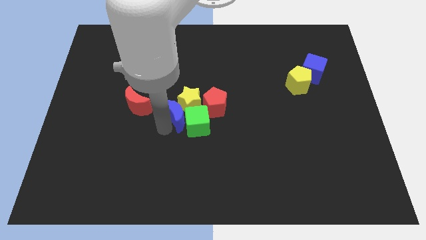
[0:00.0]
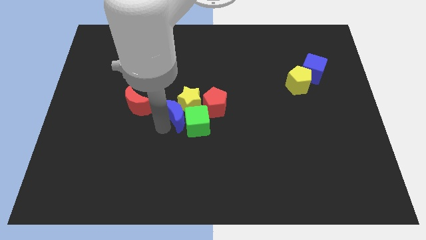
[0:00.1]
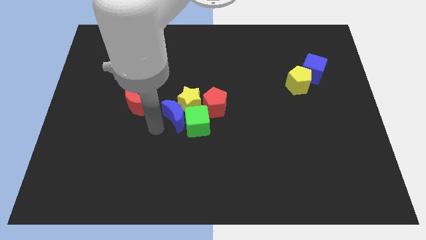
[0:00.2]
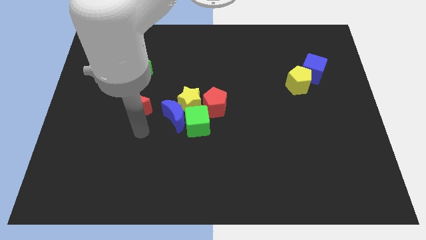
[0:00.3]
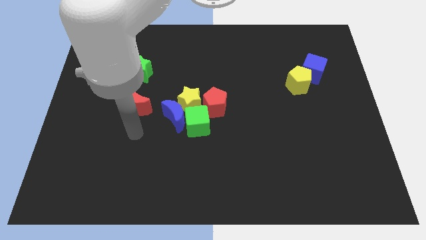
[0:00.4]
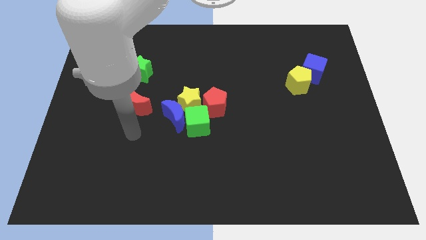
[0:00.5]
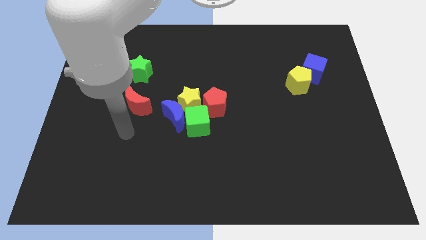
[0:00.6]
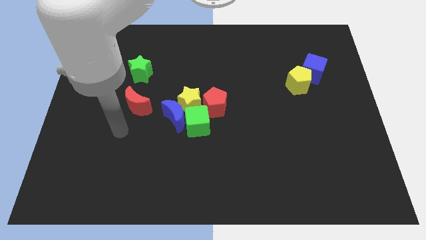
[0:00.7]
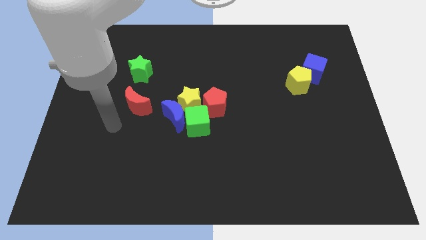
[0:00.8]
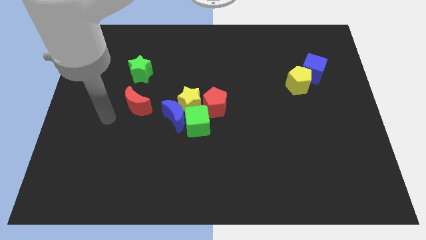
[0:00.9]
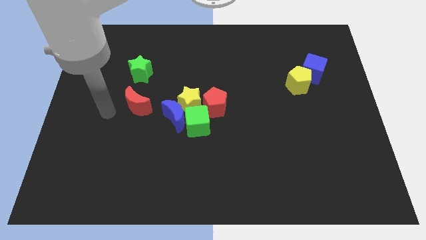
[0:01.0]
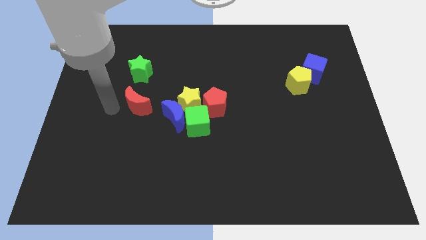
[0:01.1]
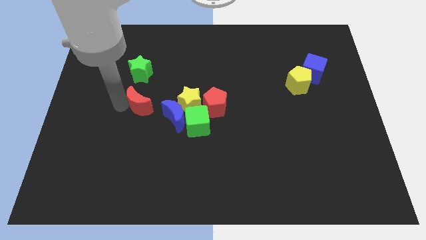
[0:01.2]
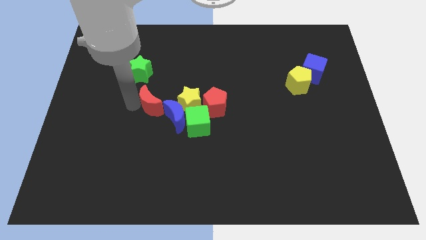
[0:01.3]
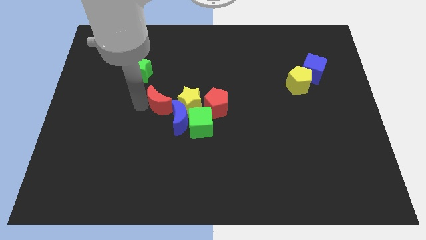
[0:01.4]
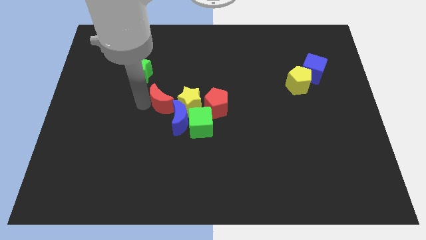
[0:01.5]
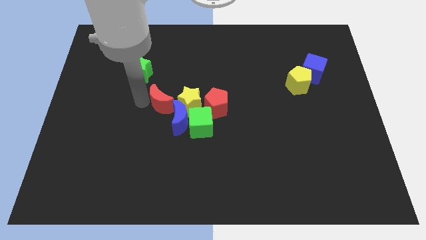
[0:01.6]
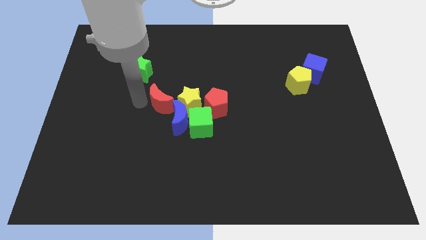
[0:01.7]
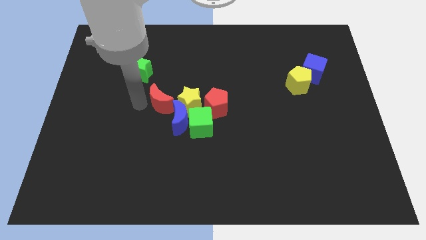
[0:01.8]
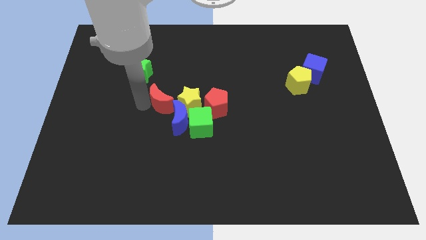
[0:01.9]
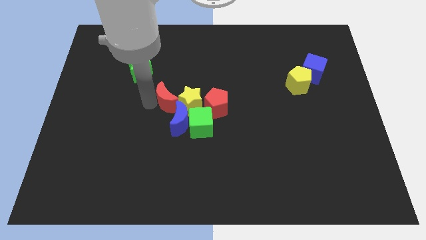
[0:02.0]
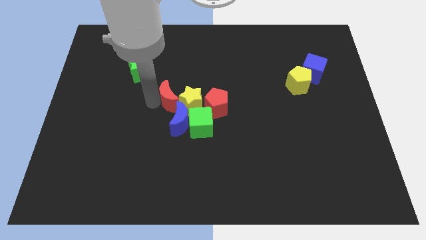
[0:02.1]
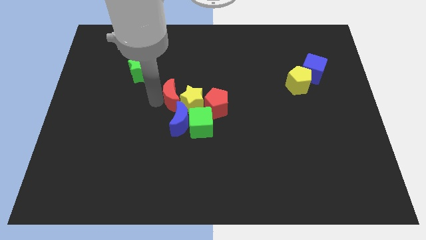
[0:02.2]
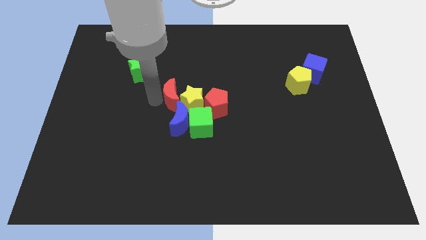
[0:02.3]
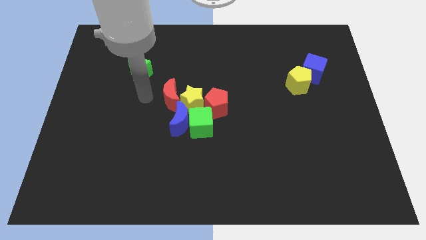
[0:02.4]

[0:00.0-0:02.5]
make a group red blocks yellow stargreen cube and blue moon

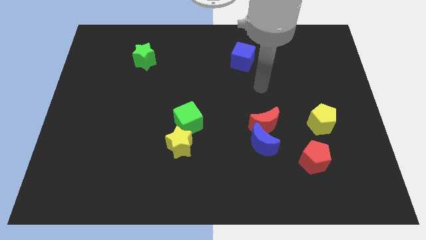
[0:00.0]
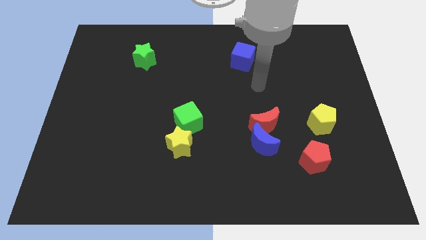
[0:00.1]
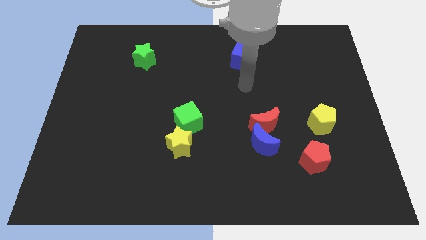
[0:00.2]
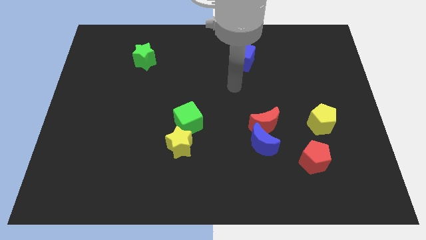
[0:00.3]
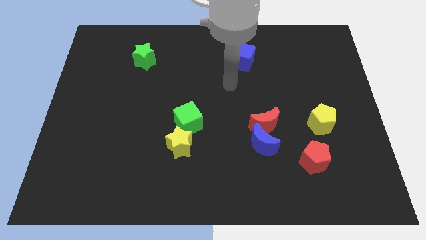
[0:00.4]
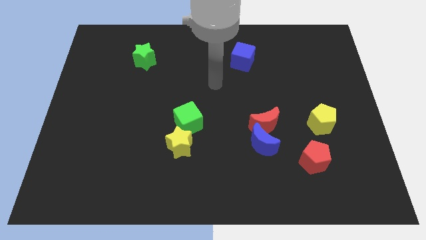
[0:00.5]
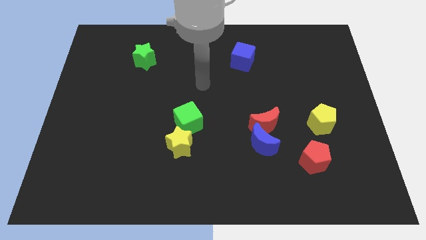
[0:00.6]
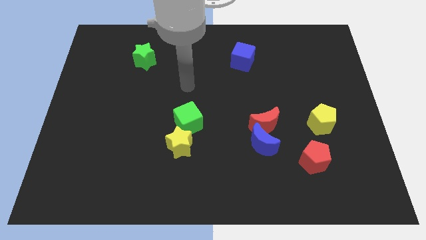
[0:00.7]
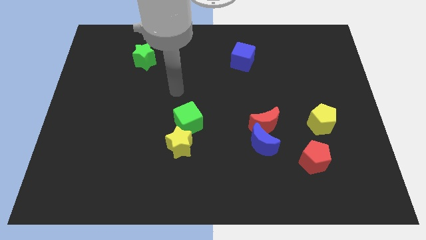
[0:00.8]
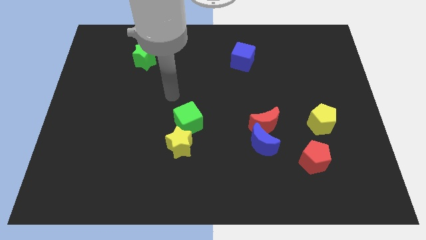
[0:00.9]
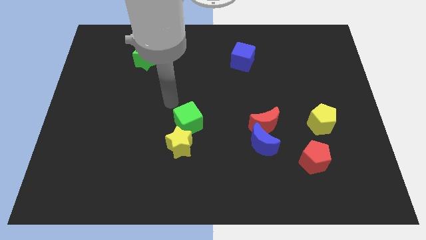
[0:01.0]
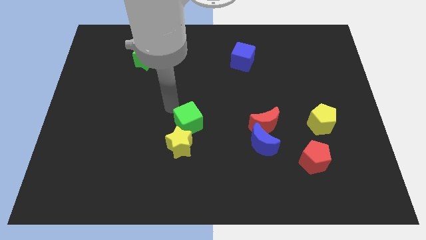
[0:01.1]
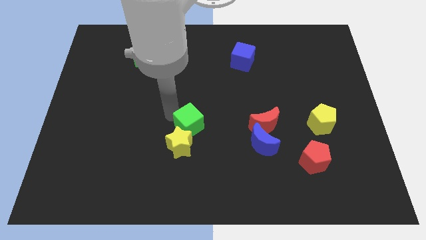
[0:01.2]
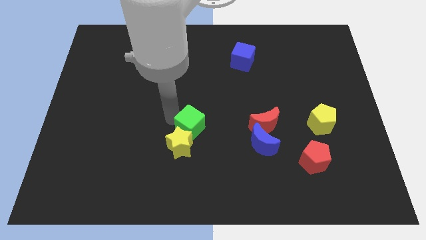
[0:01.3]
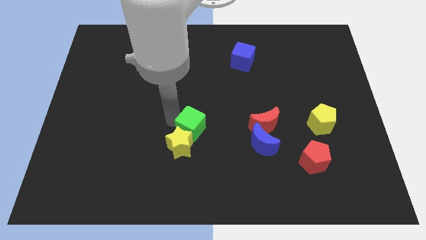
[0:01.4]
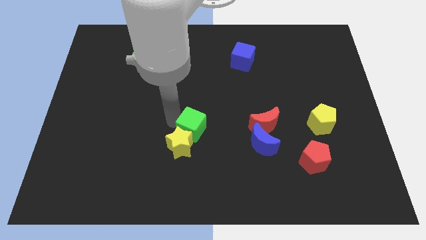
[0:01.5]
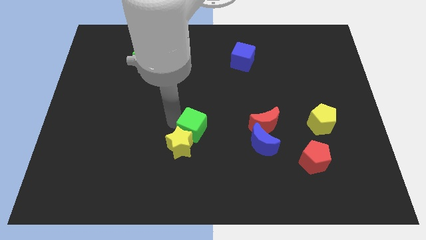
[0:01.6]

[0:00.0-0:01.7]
touch the left side of the green cube

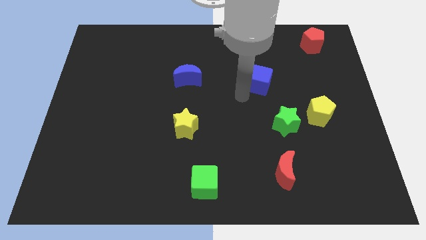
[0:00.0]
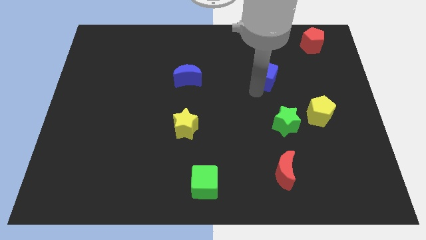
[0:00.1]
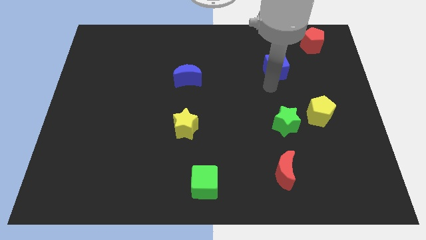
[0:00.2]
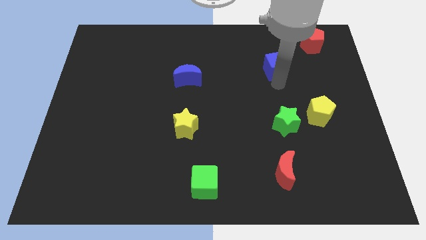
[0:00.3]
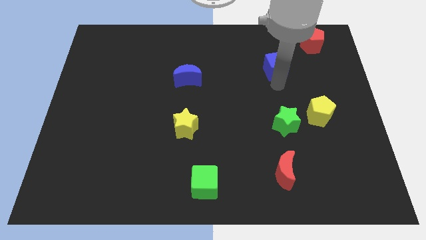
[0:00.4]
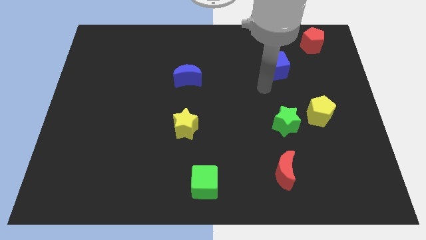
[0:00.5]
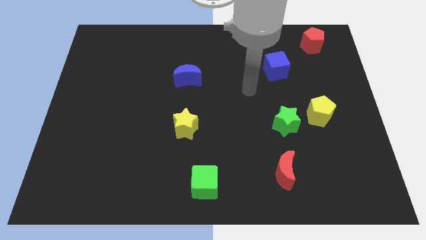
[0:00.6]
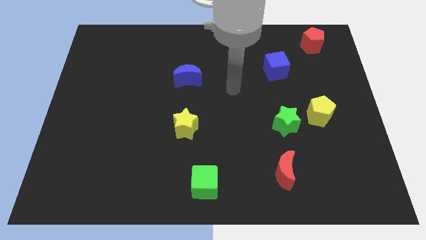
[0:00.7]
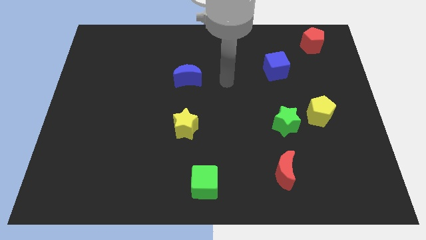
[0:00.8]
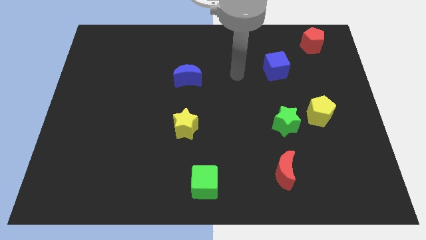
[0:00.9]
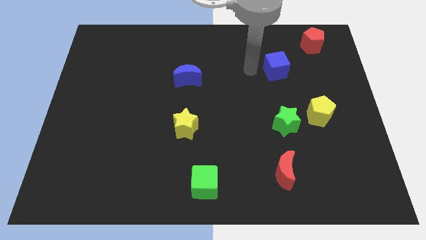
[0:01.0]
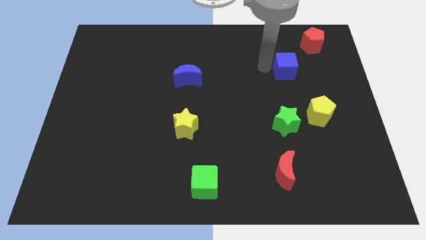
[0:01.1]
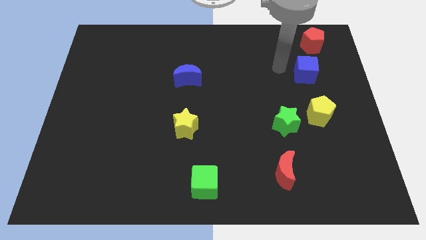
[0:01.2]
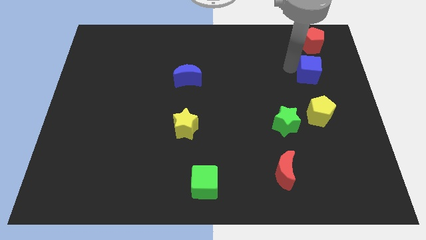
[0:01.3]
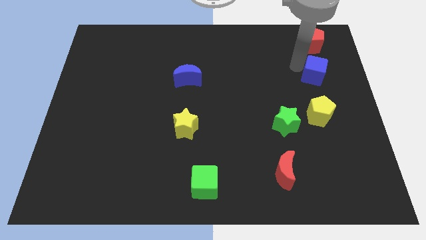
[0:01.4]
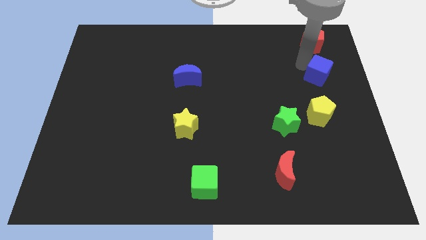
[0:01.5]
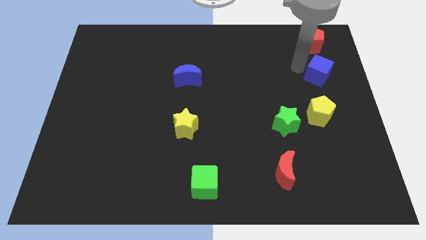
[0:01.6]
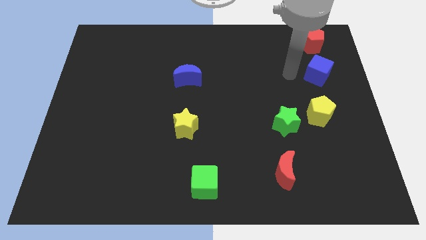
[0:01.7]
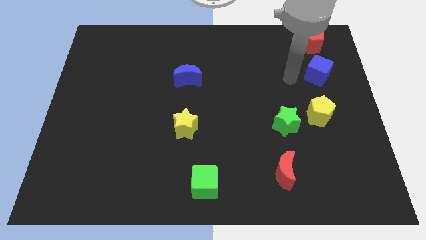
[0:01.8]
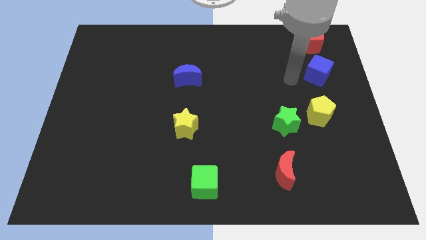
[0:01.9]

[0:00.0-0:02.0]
move the blue cube between red pentagon and yellow pentagon

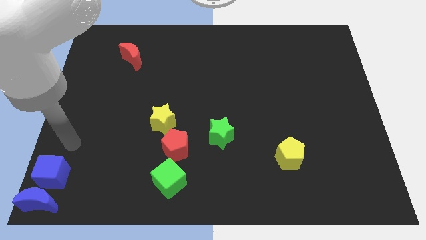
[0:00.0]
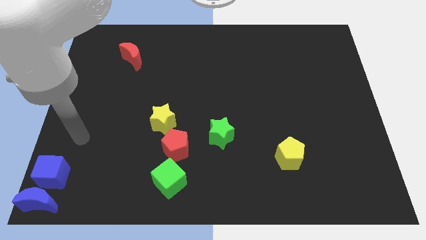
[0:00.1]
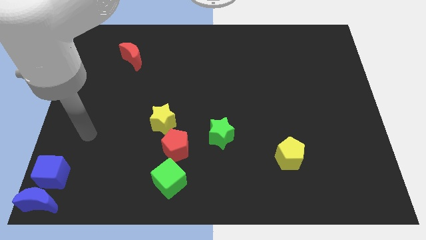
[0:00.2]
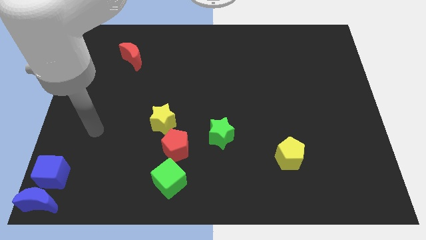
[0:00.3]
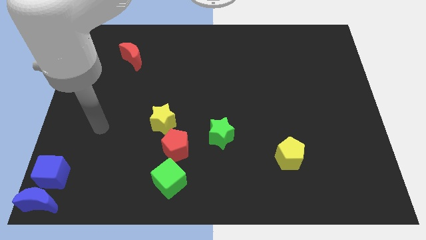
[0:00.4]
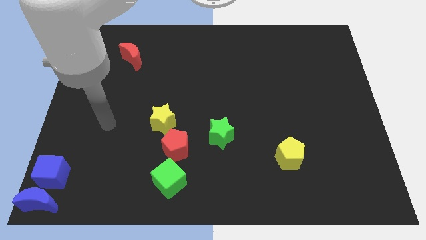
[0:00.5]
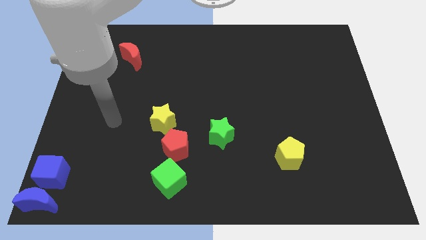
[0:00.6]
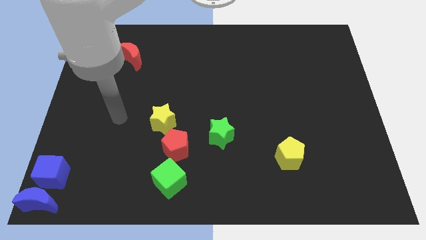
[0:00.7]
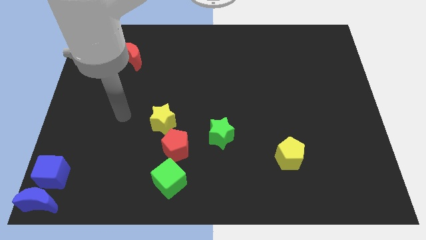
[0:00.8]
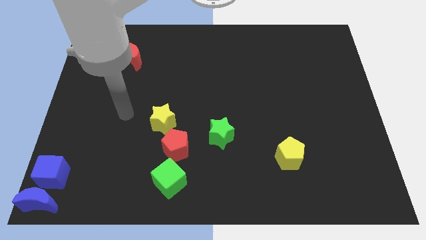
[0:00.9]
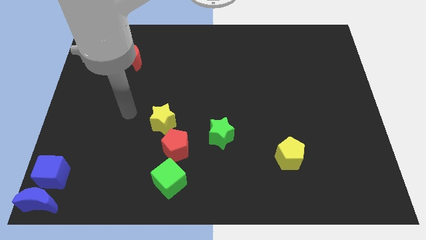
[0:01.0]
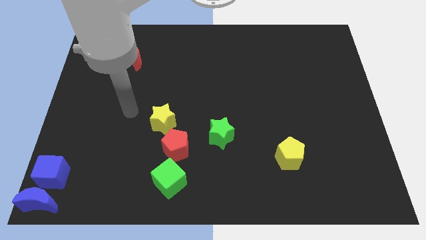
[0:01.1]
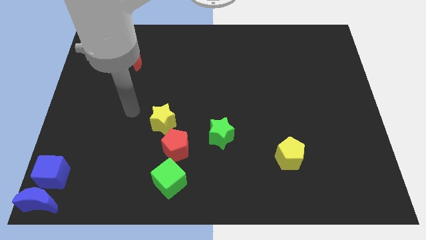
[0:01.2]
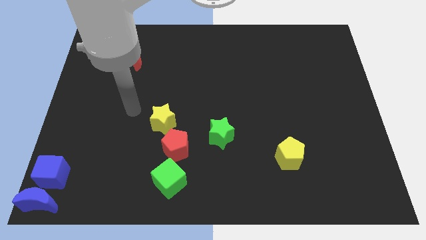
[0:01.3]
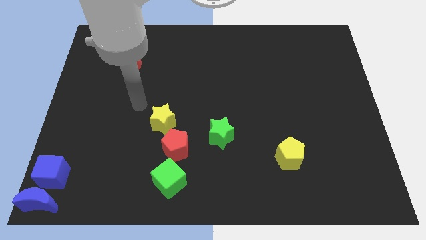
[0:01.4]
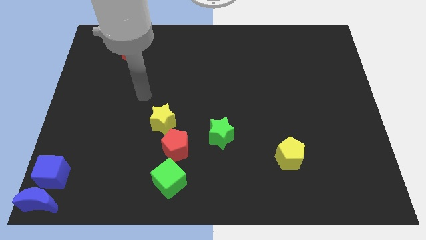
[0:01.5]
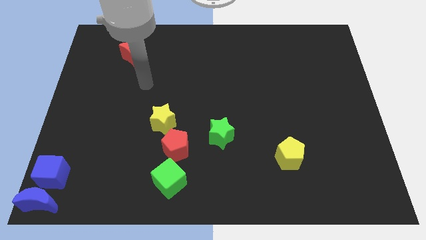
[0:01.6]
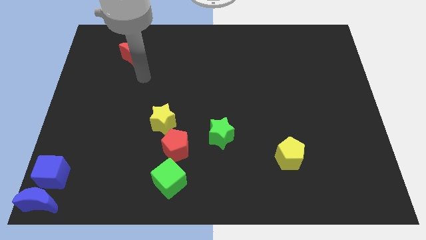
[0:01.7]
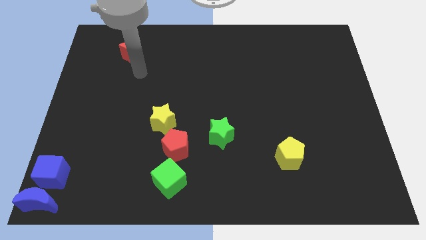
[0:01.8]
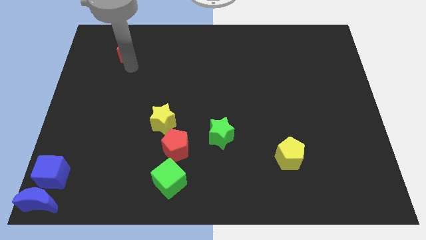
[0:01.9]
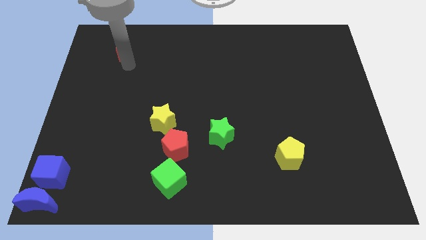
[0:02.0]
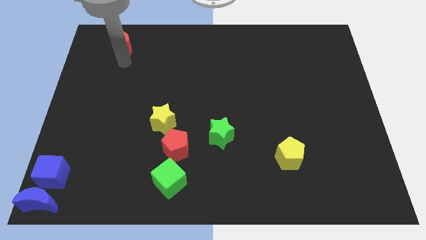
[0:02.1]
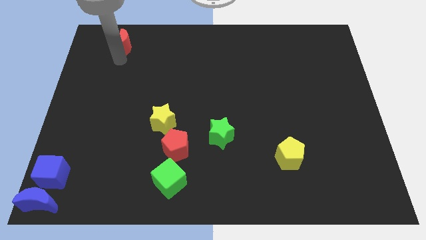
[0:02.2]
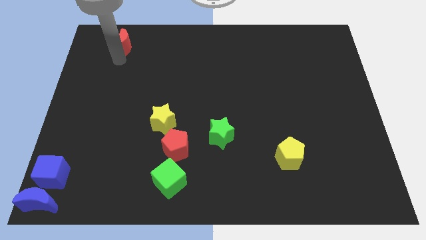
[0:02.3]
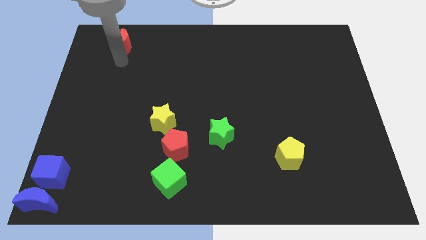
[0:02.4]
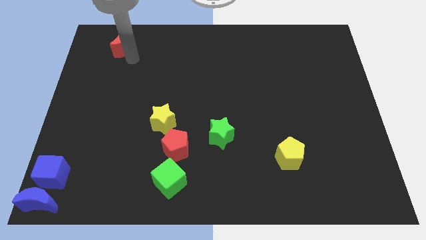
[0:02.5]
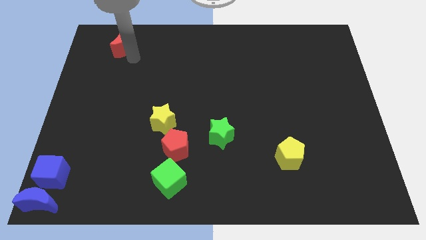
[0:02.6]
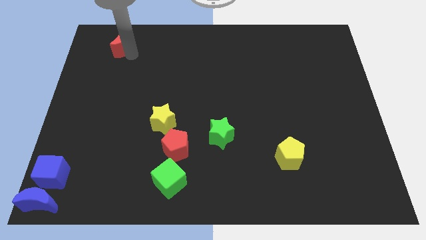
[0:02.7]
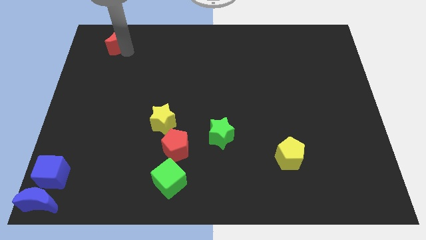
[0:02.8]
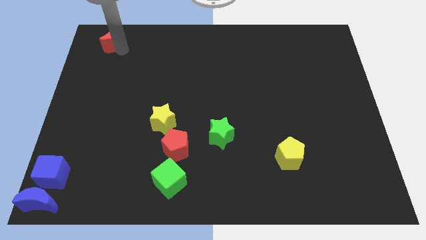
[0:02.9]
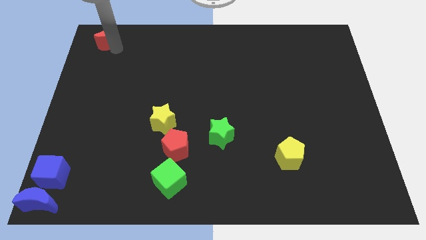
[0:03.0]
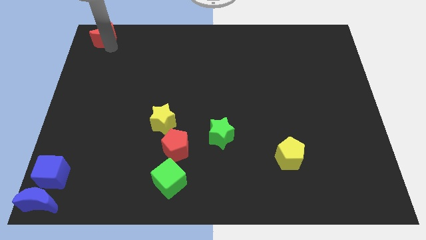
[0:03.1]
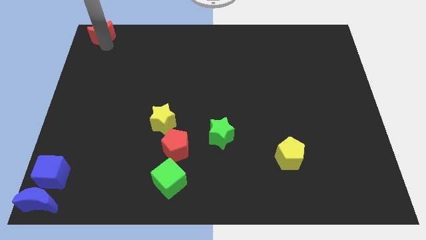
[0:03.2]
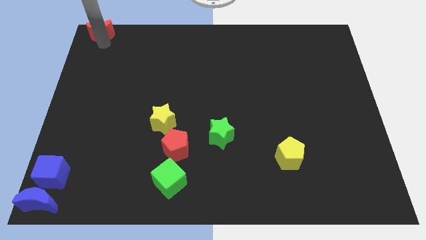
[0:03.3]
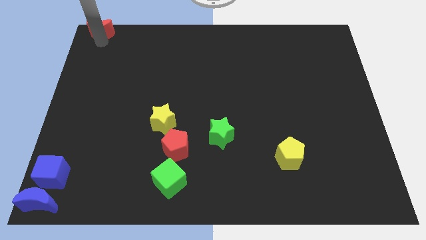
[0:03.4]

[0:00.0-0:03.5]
move red moon to top left corner
